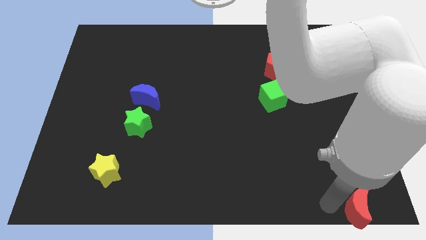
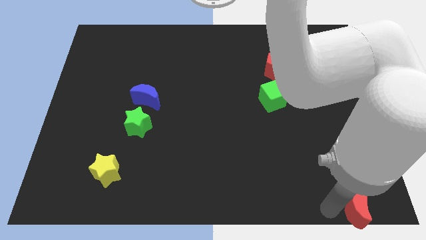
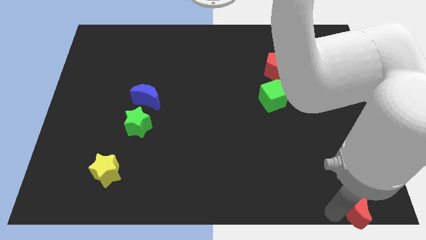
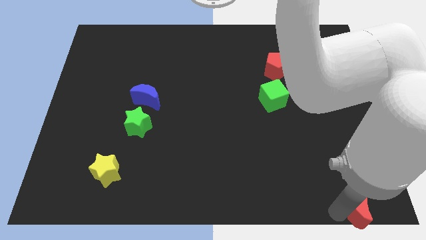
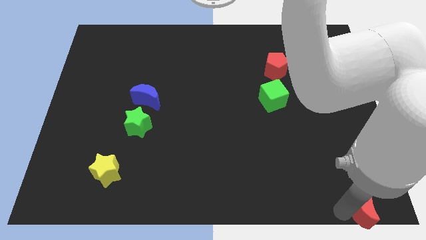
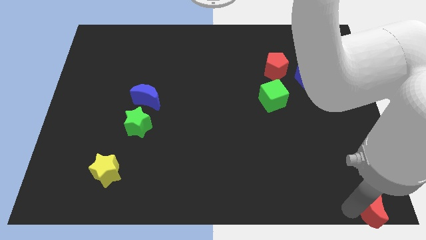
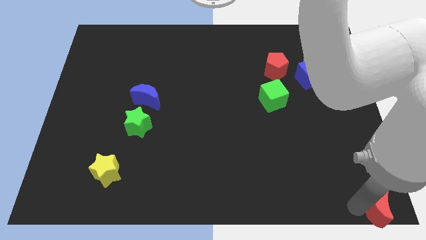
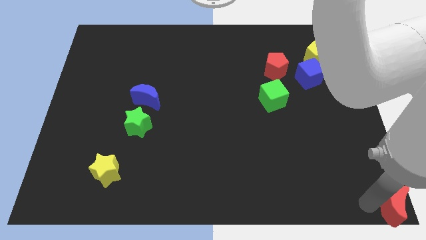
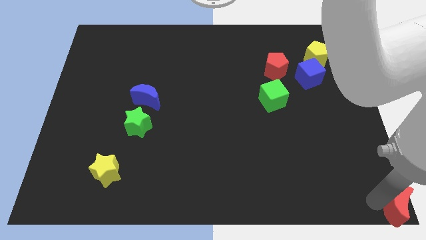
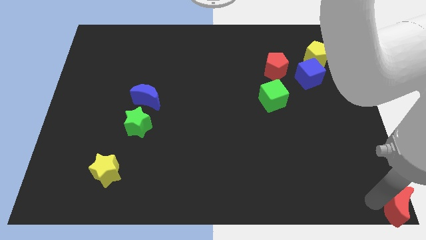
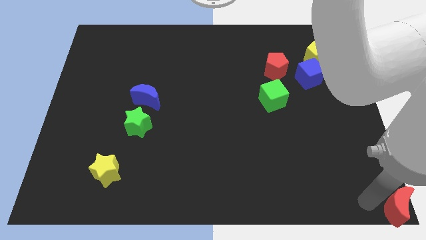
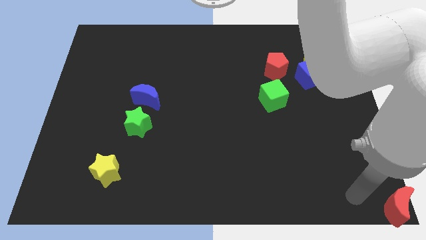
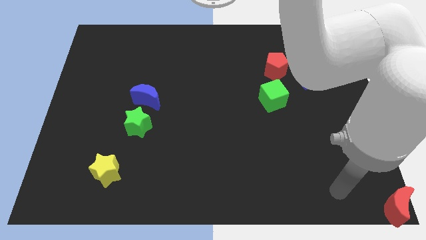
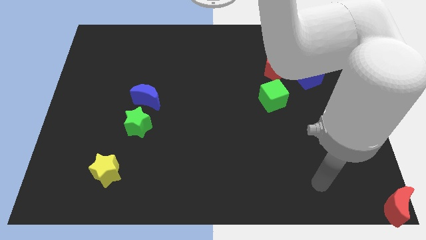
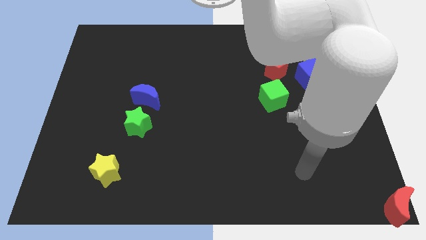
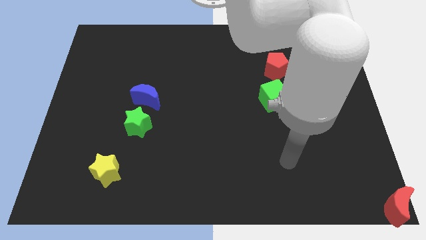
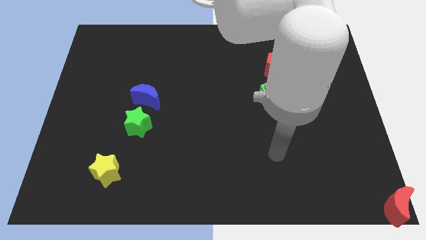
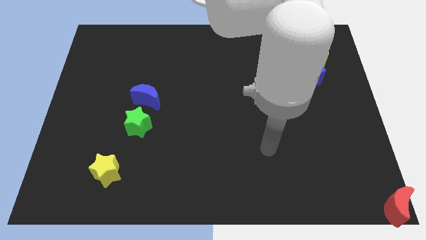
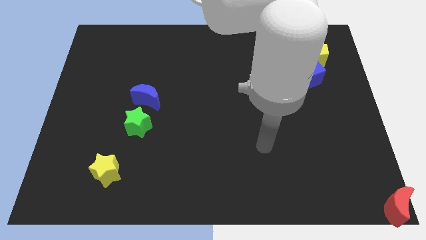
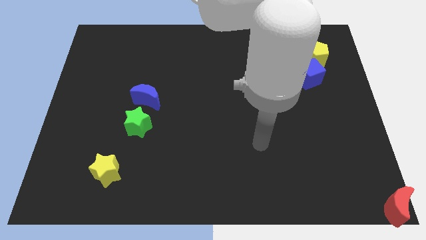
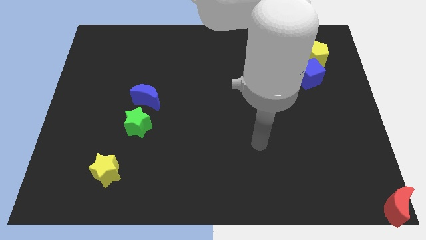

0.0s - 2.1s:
place the red moon at the bottom right corner of the board

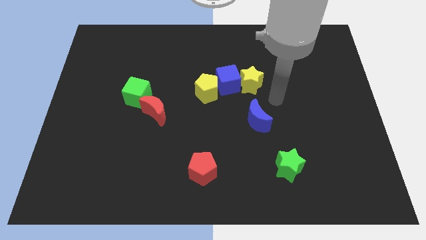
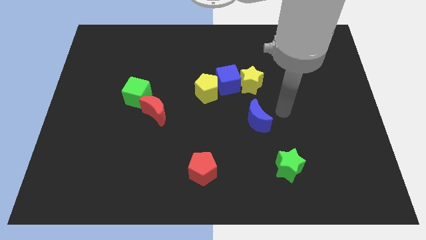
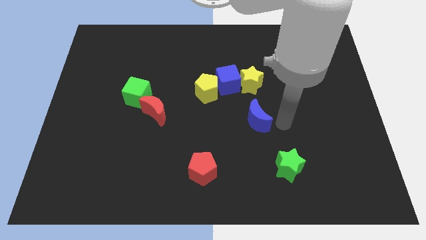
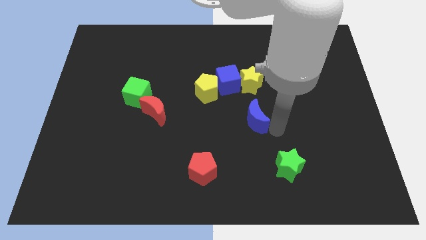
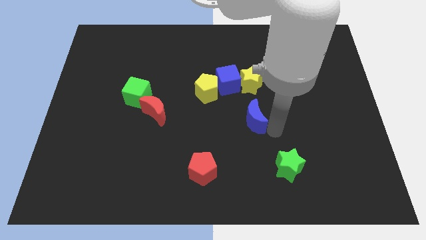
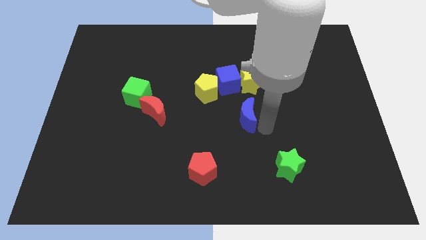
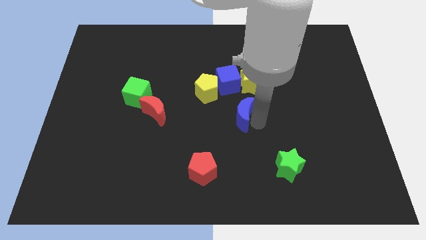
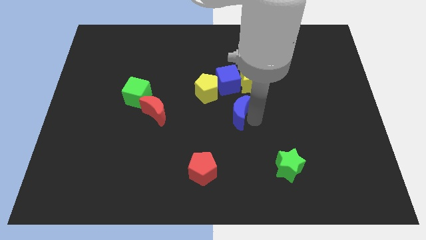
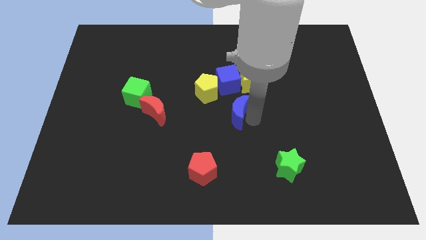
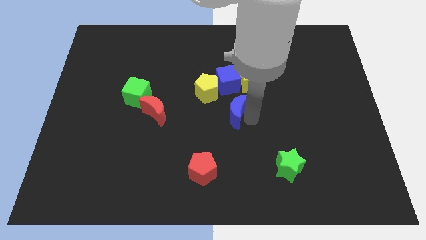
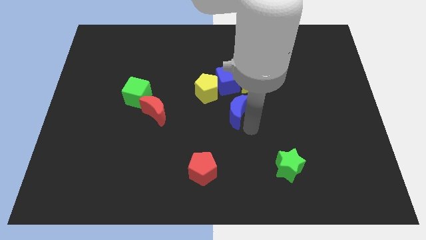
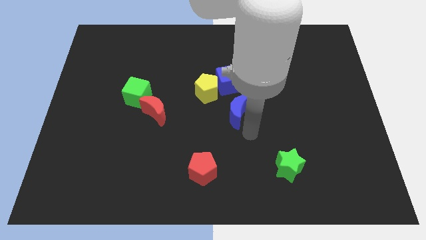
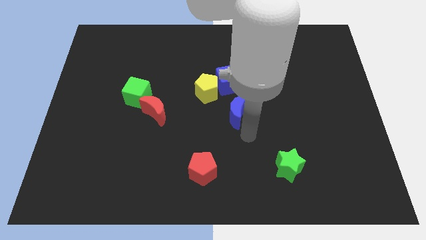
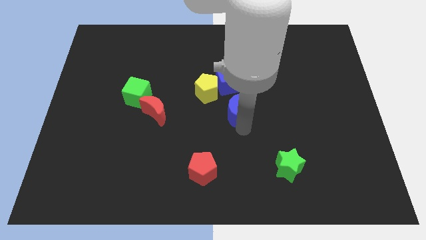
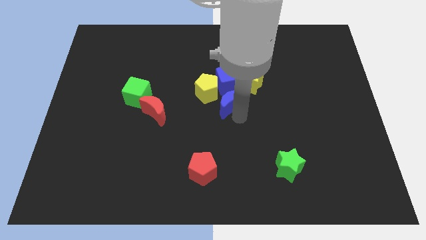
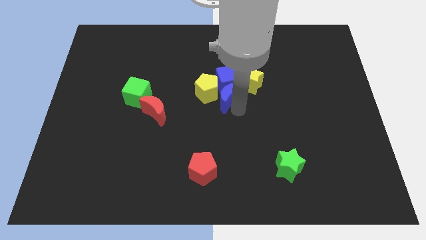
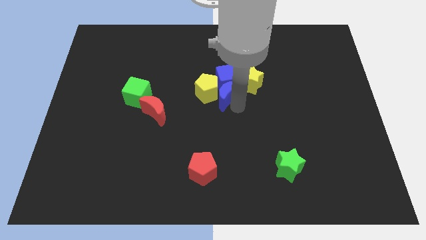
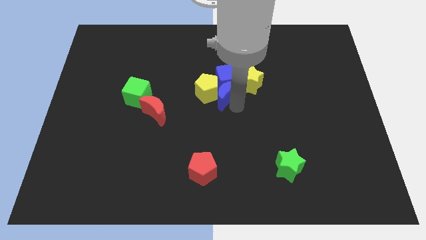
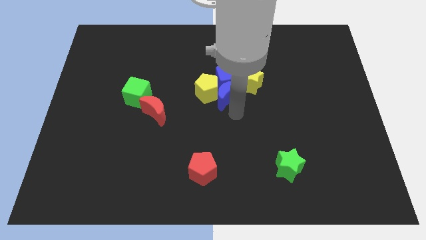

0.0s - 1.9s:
place the red crescent close to the blocks

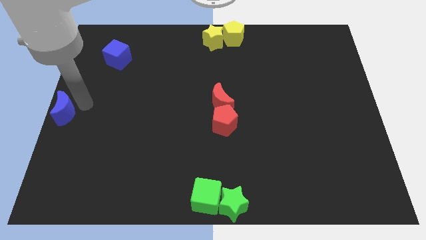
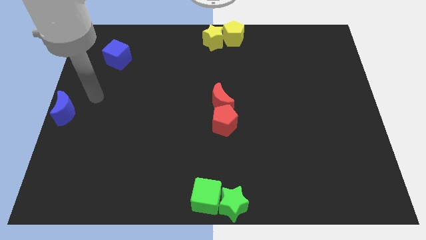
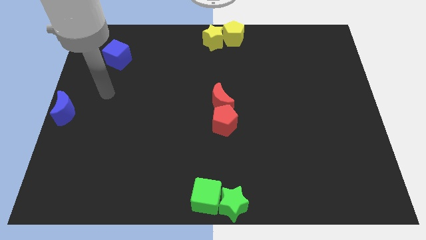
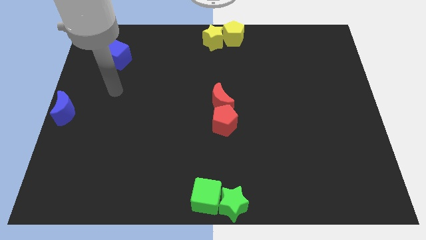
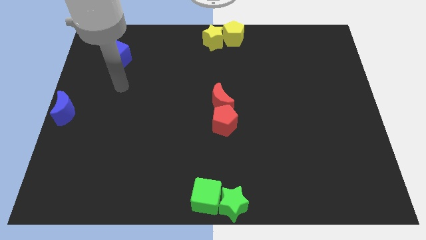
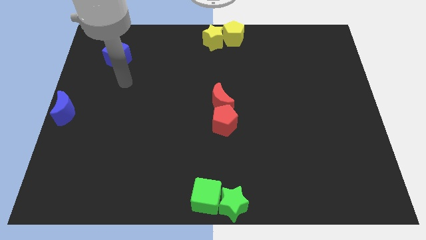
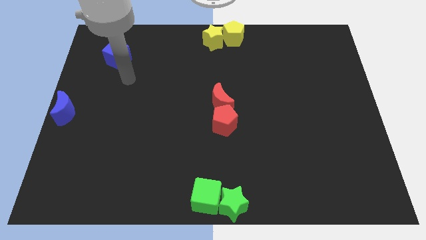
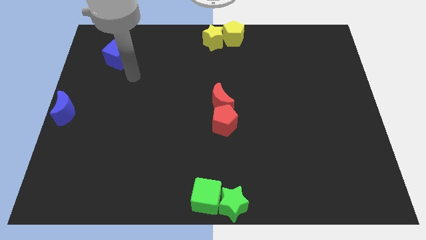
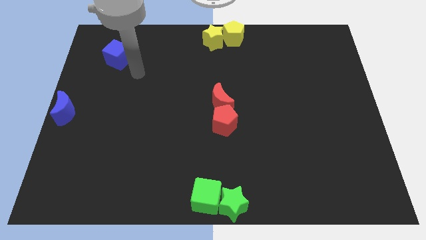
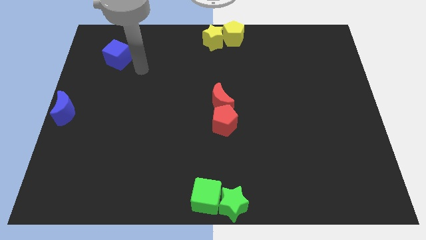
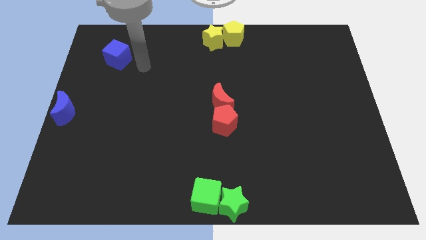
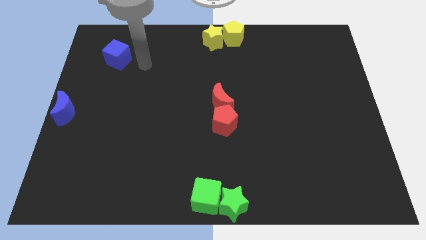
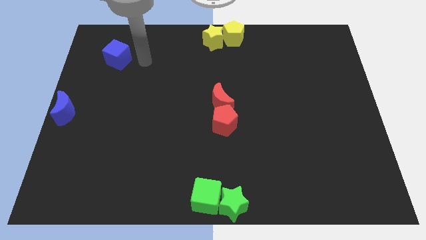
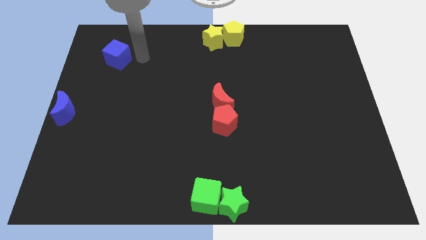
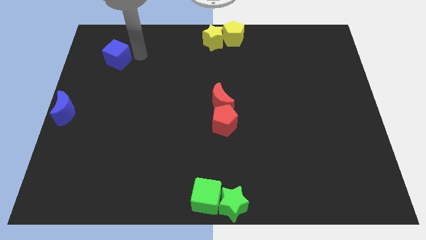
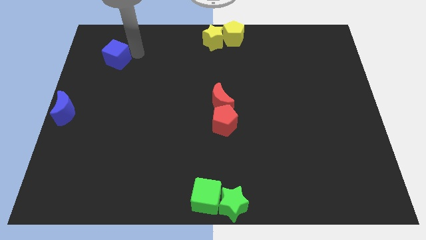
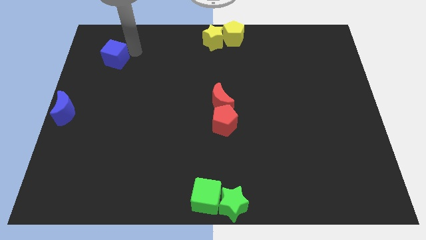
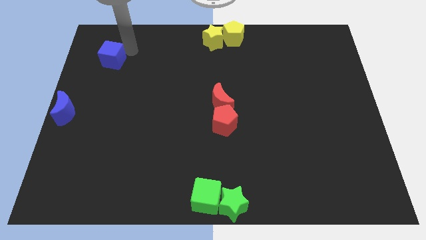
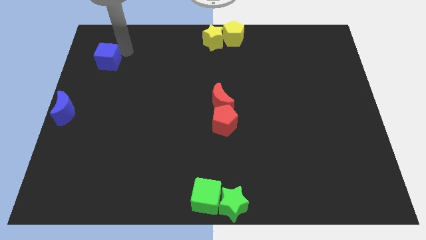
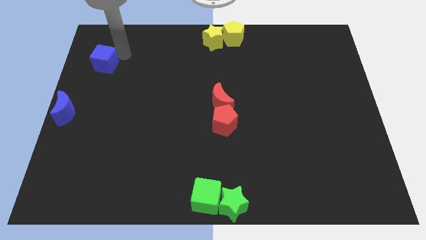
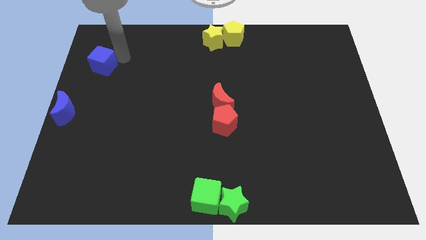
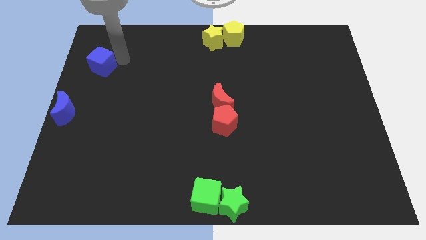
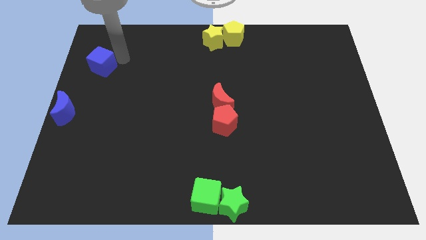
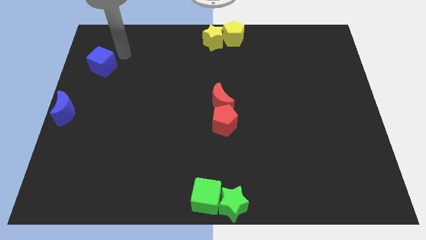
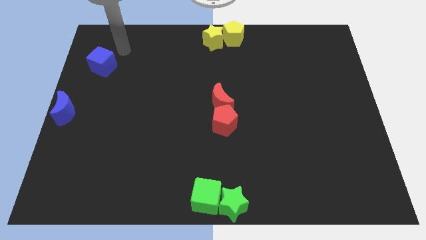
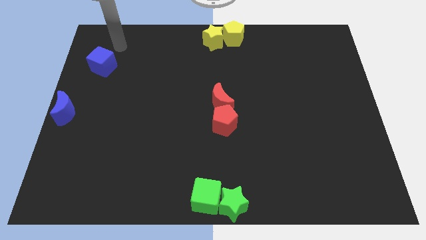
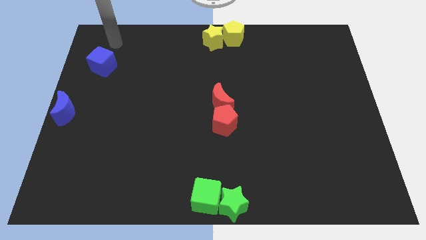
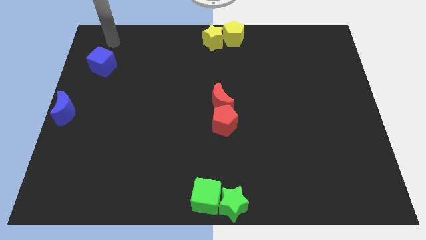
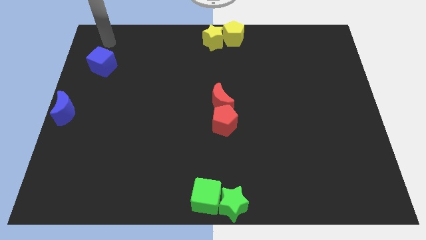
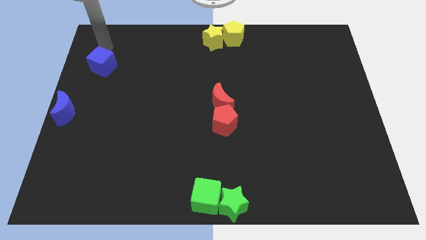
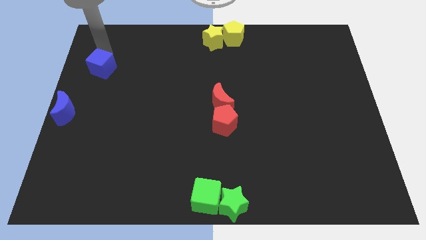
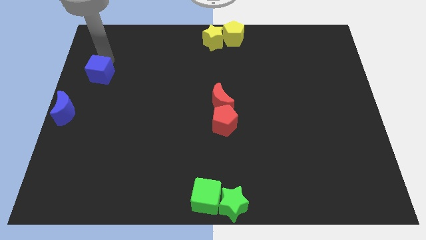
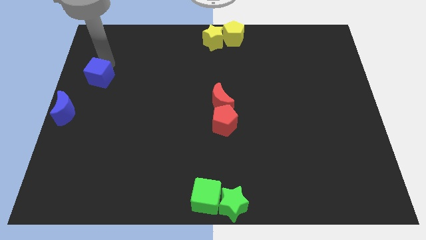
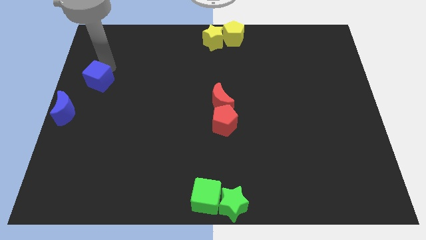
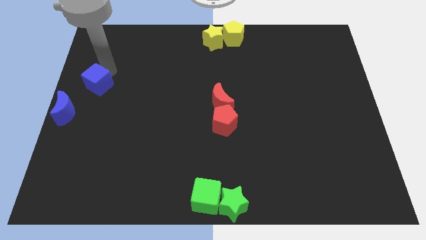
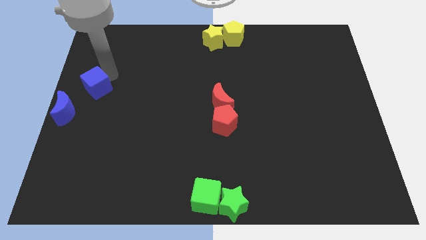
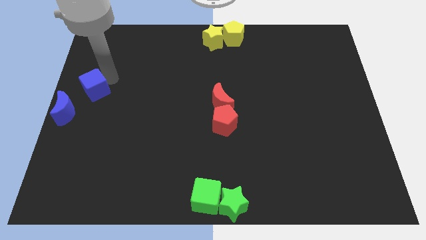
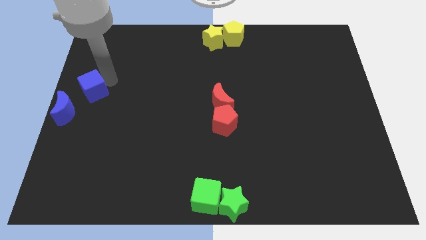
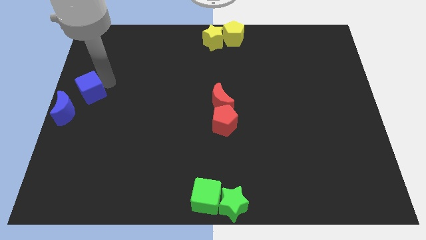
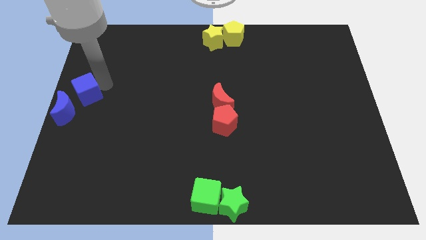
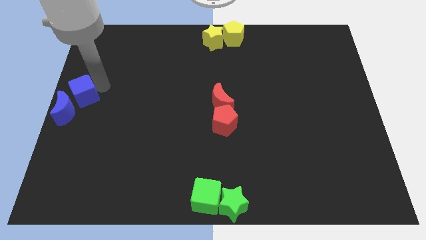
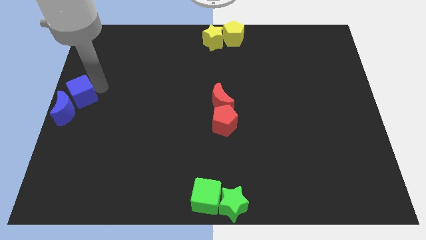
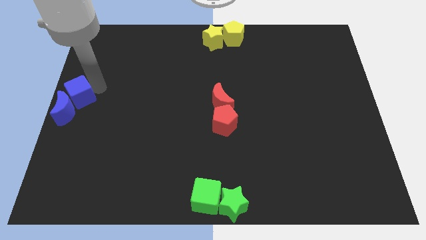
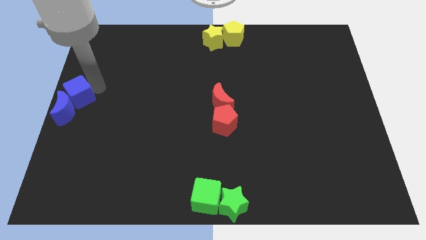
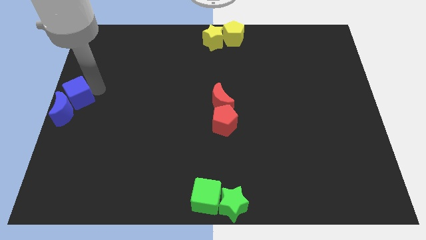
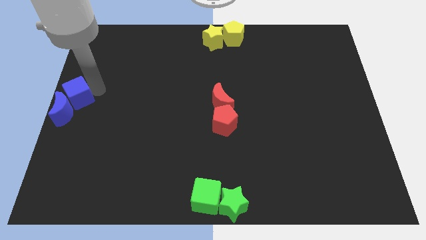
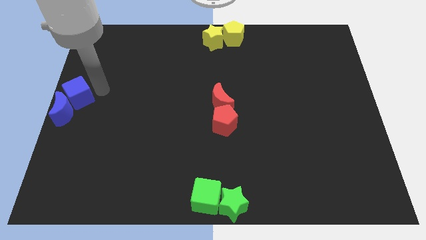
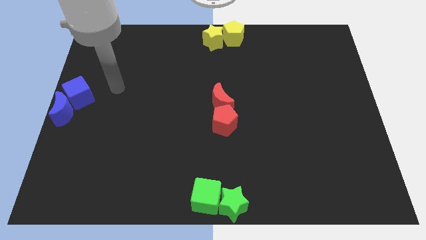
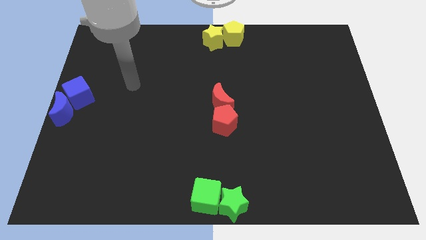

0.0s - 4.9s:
move the blue cube into the blue crescent
